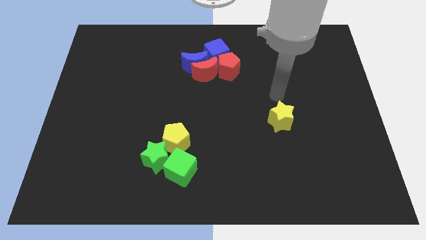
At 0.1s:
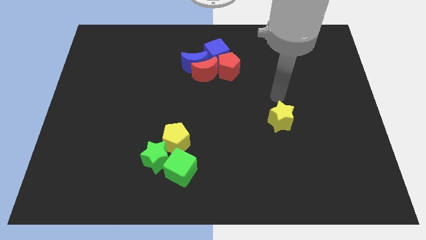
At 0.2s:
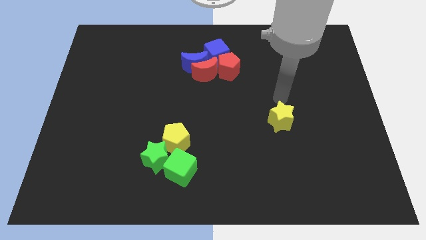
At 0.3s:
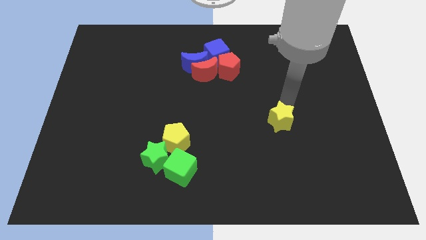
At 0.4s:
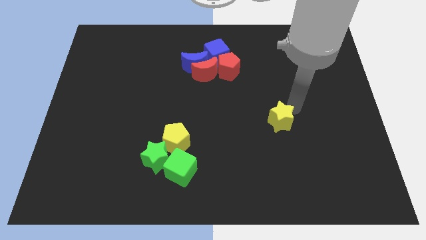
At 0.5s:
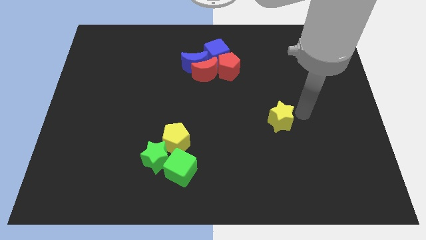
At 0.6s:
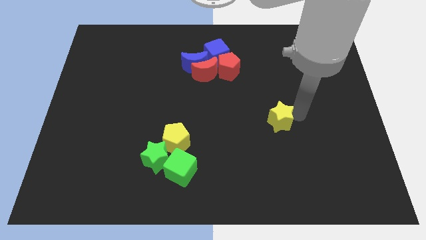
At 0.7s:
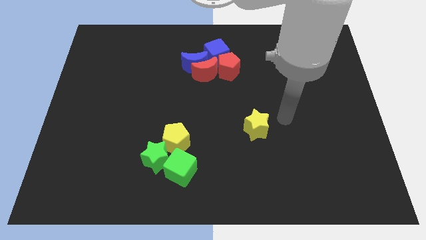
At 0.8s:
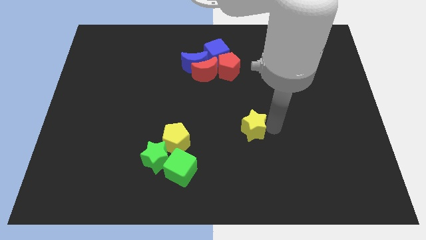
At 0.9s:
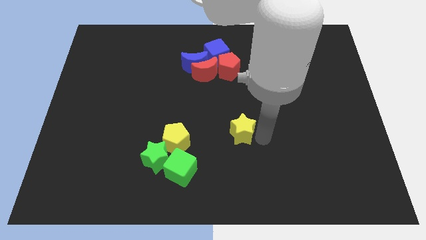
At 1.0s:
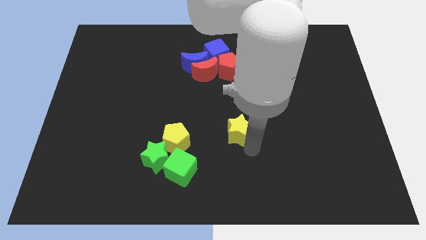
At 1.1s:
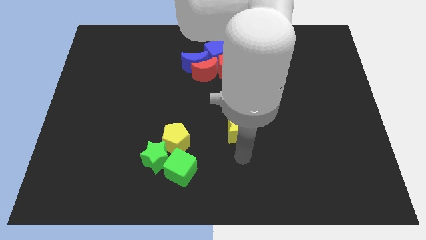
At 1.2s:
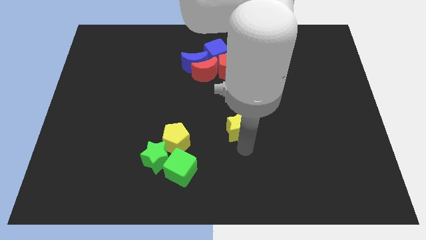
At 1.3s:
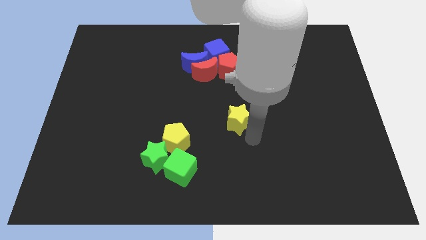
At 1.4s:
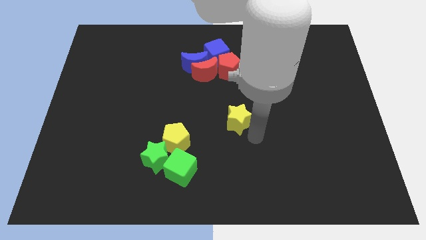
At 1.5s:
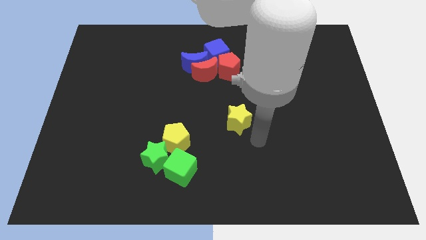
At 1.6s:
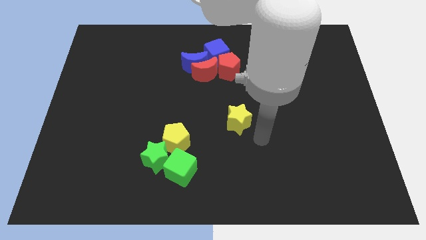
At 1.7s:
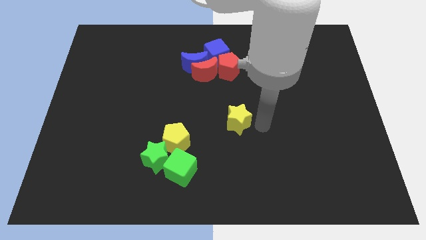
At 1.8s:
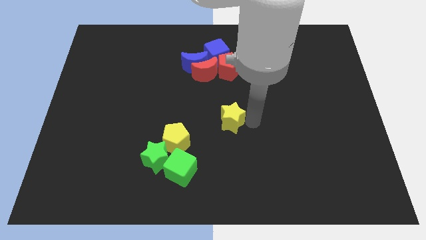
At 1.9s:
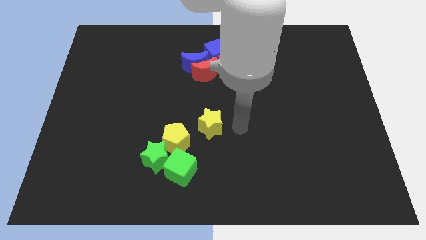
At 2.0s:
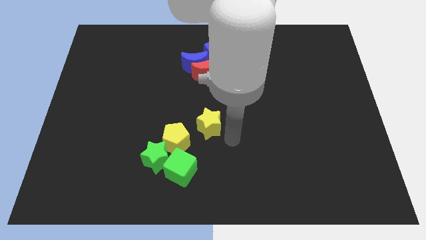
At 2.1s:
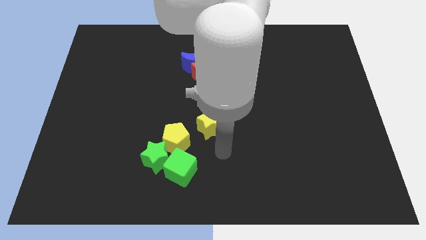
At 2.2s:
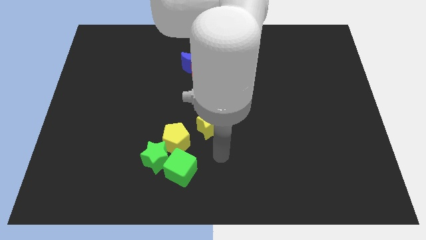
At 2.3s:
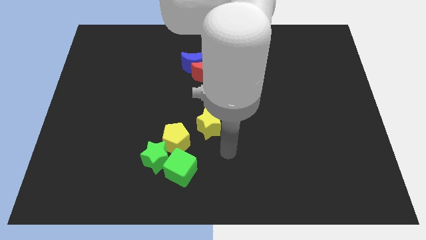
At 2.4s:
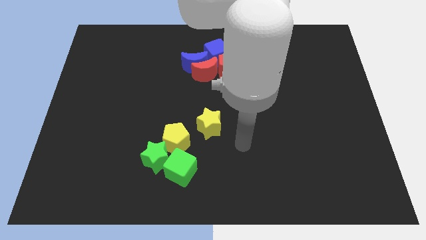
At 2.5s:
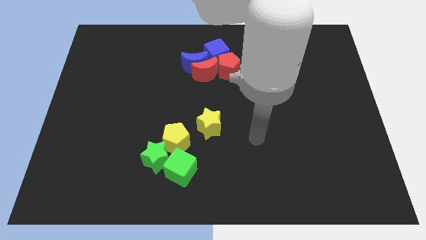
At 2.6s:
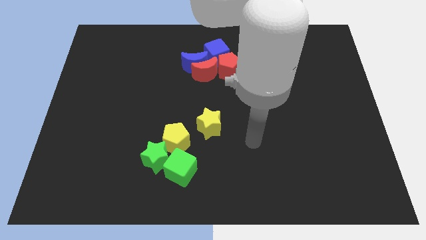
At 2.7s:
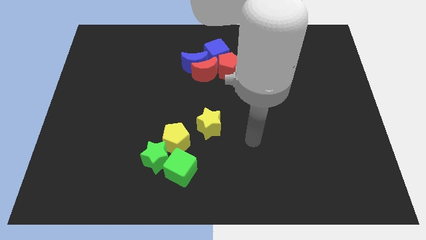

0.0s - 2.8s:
move the yellow star diagonally right of the yellow pentagon

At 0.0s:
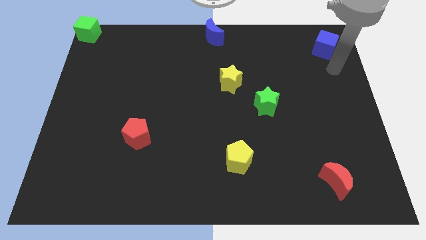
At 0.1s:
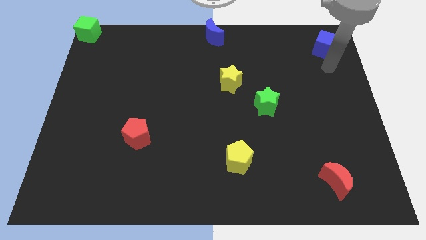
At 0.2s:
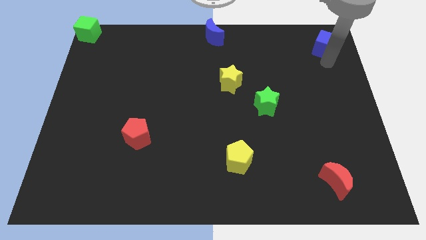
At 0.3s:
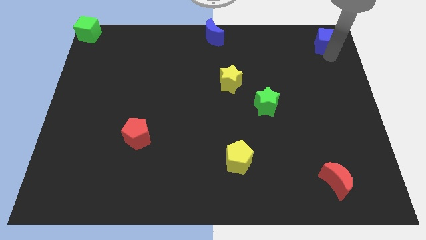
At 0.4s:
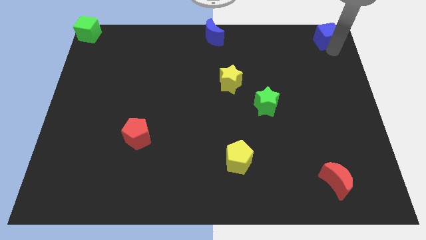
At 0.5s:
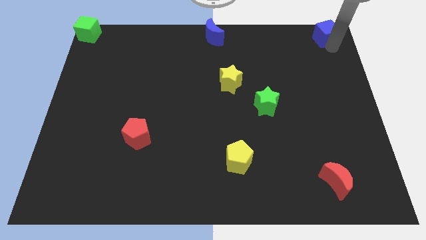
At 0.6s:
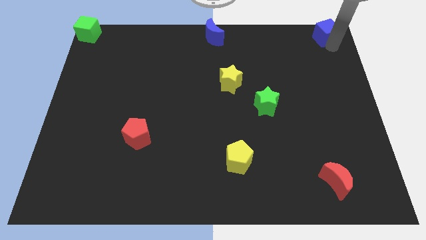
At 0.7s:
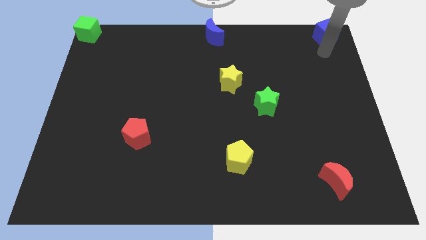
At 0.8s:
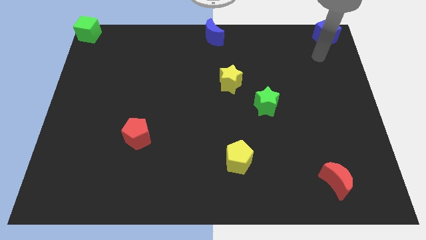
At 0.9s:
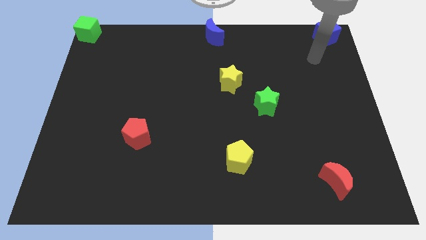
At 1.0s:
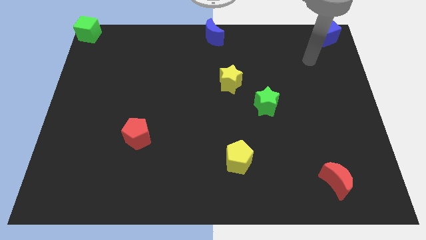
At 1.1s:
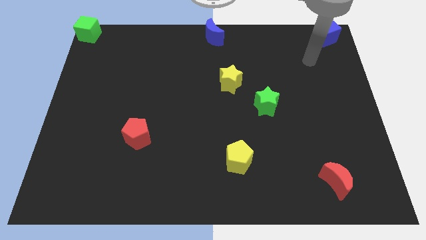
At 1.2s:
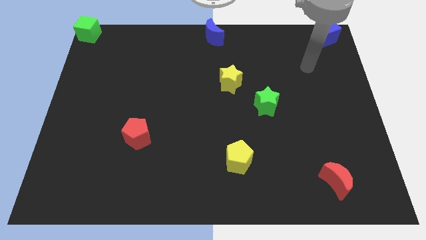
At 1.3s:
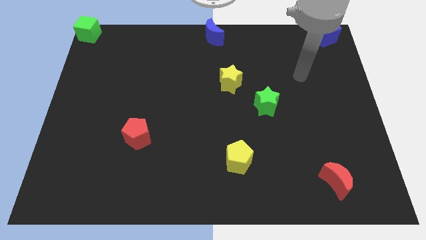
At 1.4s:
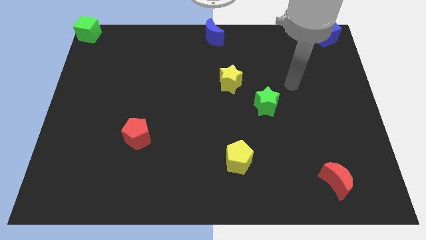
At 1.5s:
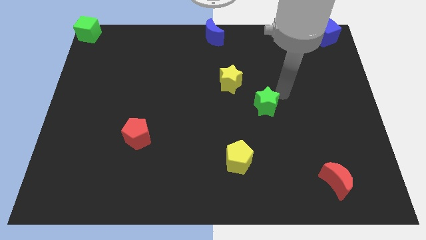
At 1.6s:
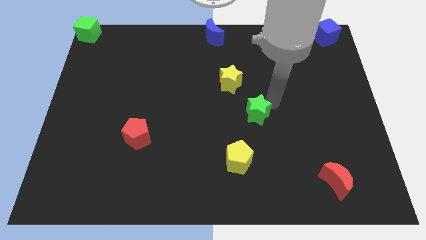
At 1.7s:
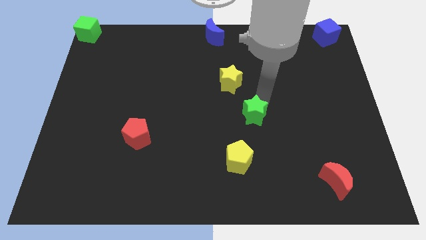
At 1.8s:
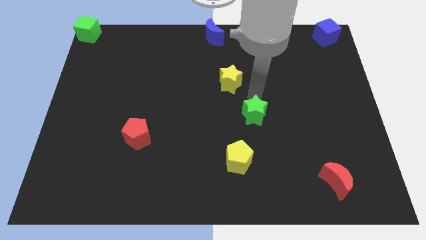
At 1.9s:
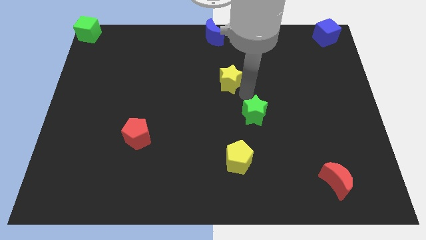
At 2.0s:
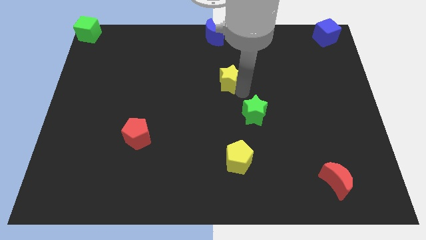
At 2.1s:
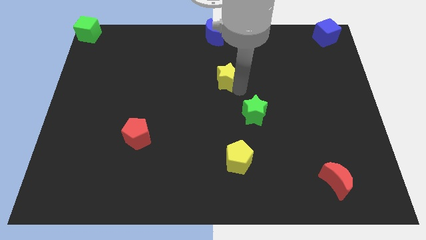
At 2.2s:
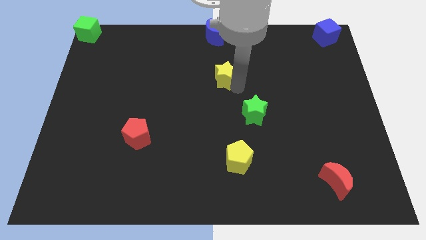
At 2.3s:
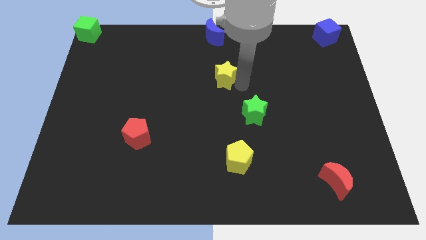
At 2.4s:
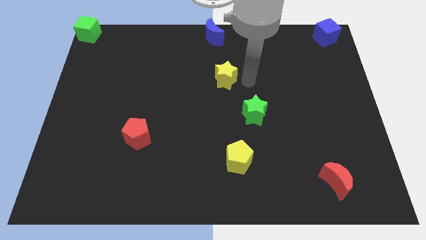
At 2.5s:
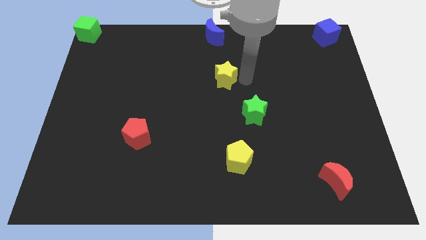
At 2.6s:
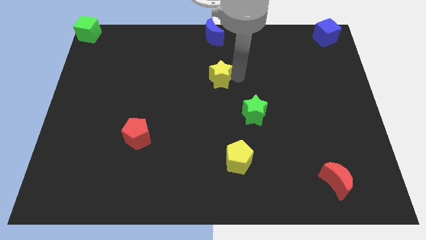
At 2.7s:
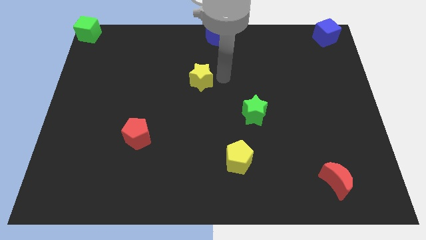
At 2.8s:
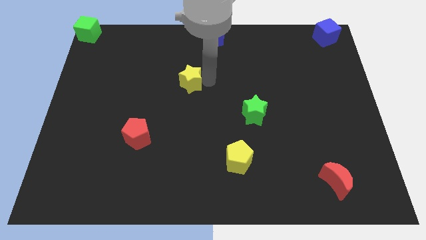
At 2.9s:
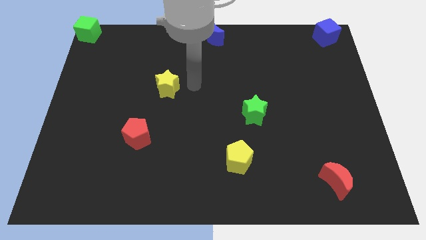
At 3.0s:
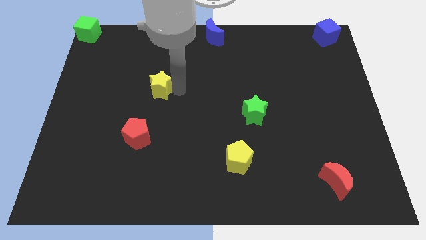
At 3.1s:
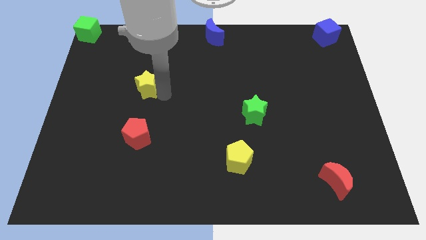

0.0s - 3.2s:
place the yellow star vertically to the red pentagon

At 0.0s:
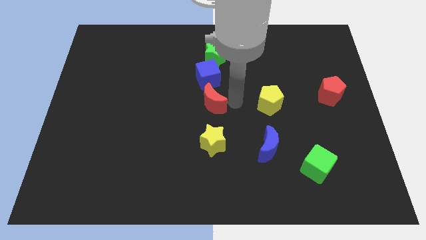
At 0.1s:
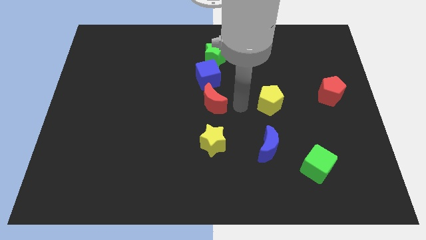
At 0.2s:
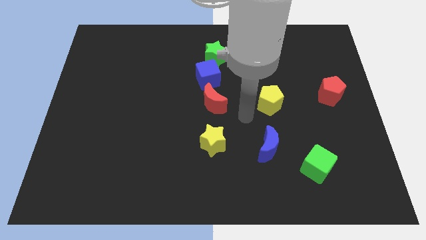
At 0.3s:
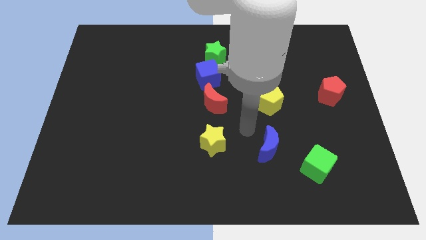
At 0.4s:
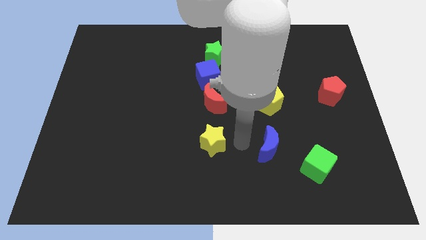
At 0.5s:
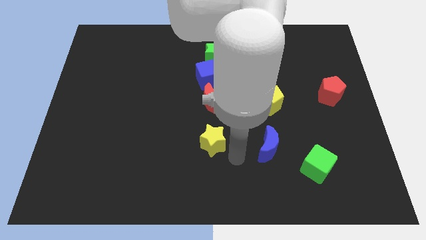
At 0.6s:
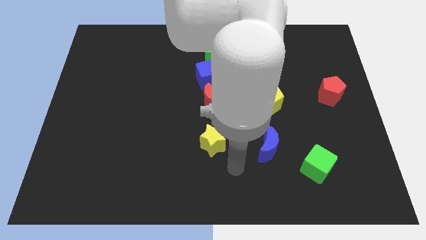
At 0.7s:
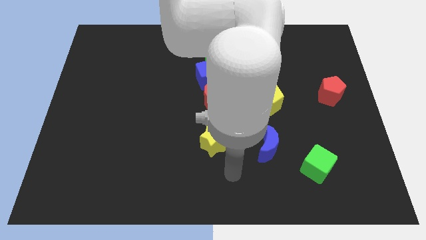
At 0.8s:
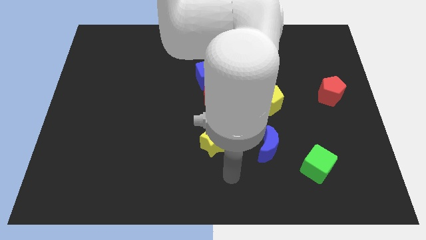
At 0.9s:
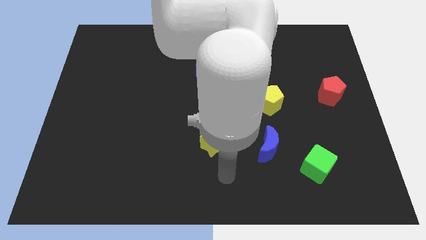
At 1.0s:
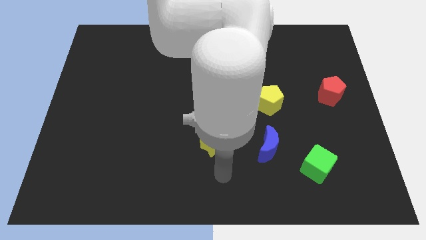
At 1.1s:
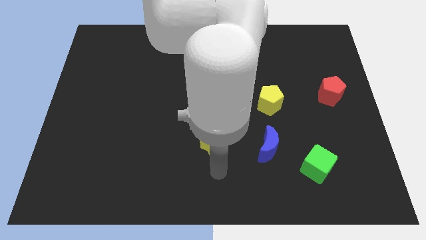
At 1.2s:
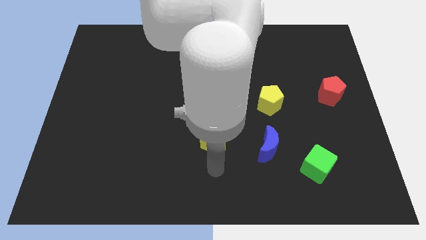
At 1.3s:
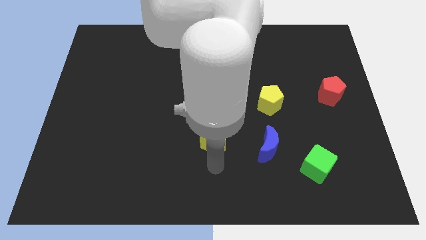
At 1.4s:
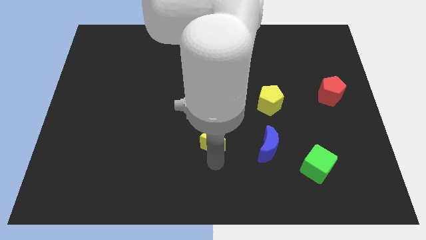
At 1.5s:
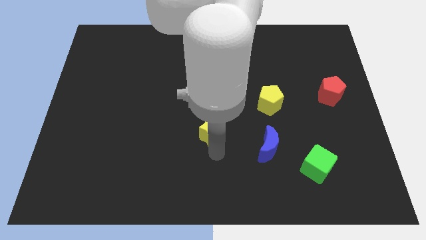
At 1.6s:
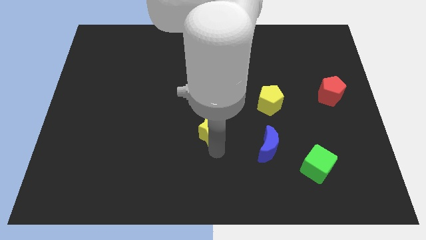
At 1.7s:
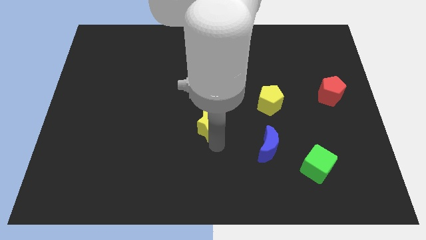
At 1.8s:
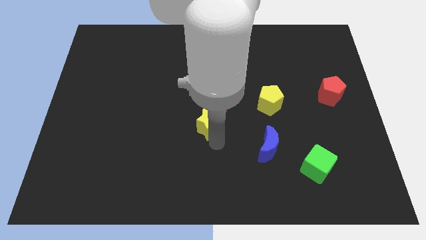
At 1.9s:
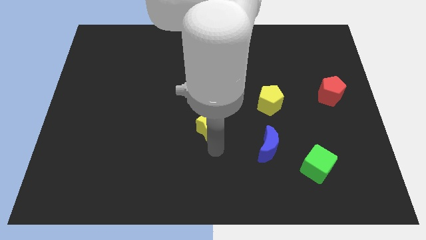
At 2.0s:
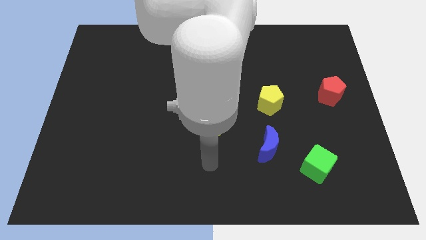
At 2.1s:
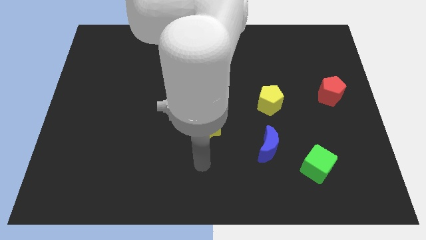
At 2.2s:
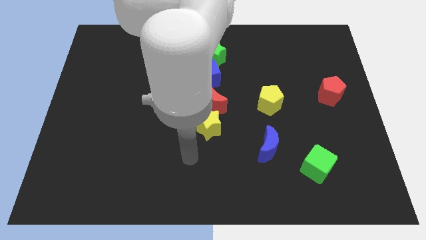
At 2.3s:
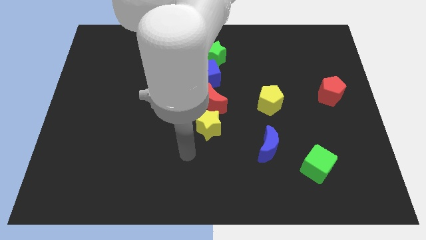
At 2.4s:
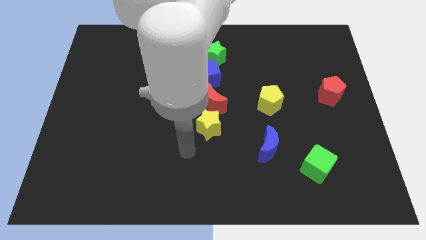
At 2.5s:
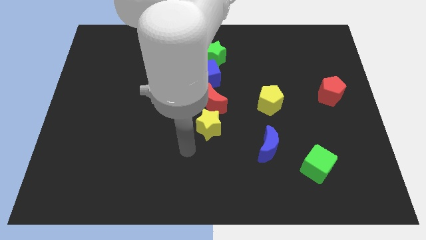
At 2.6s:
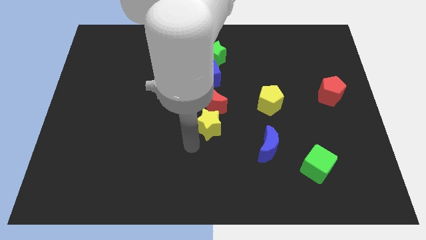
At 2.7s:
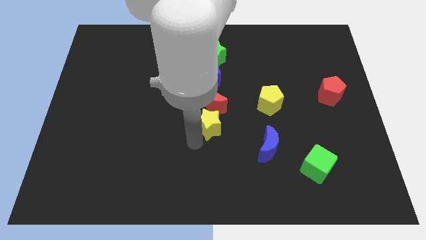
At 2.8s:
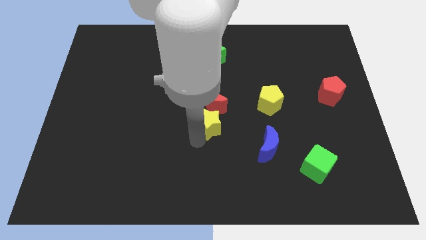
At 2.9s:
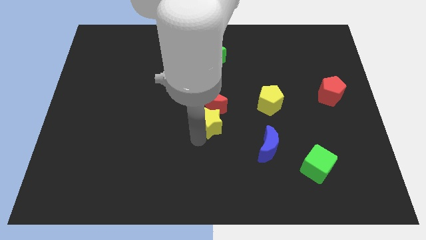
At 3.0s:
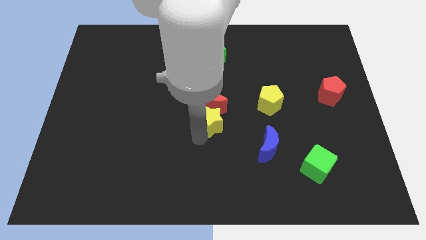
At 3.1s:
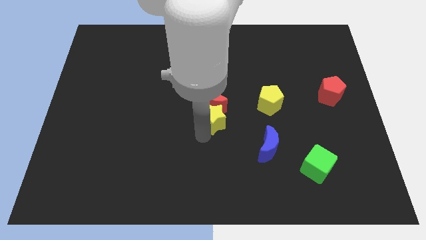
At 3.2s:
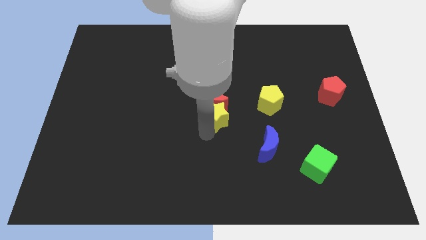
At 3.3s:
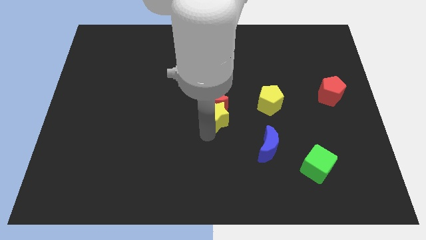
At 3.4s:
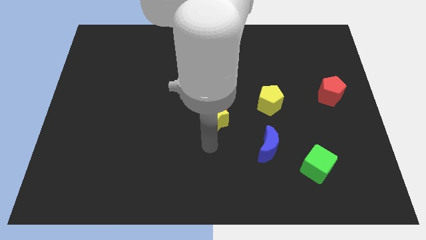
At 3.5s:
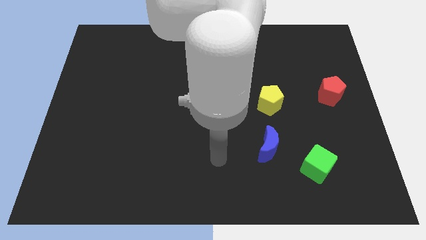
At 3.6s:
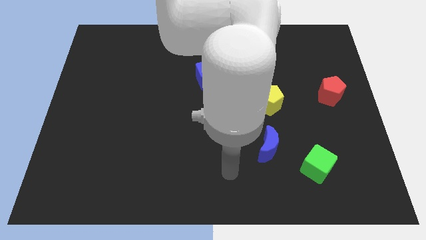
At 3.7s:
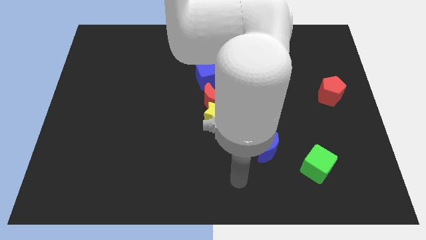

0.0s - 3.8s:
slide the yellow star to the bottom side of the red crescent
